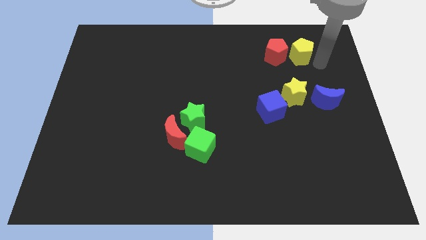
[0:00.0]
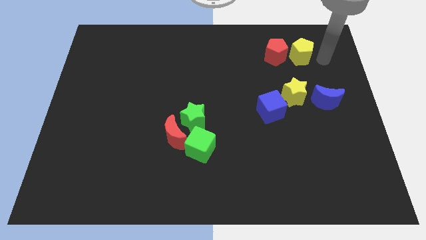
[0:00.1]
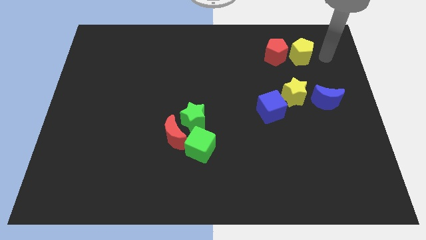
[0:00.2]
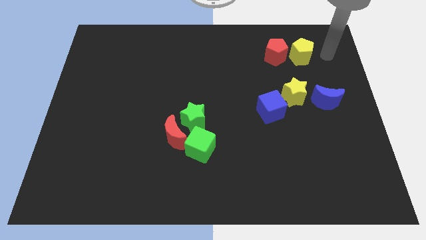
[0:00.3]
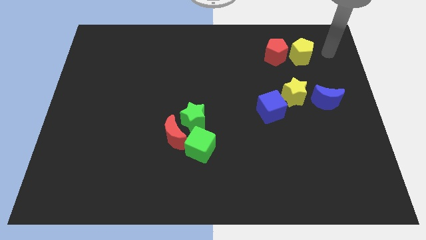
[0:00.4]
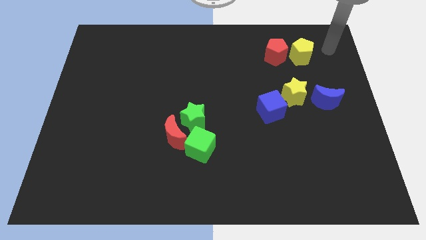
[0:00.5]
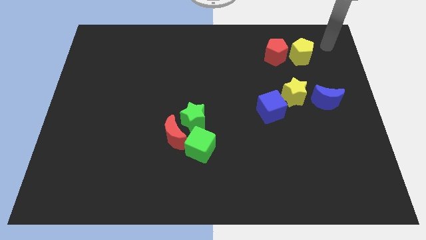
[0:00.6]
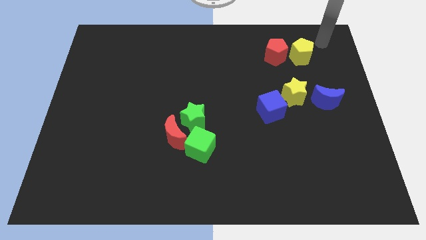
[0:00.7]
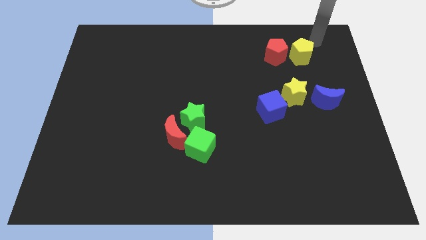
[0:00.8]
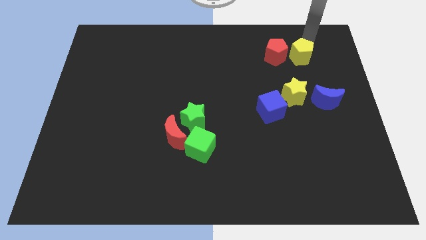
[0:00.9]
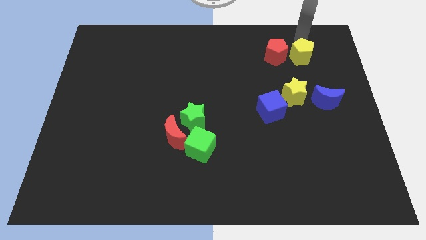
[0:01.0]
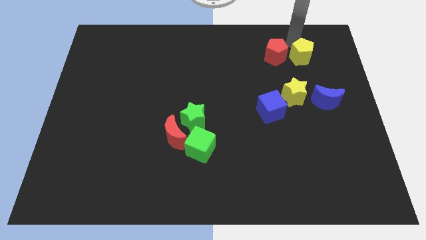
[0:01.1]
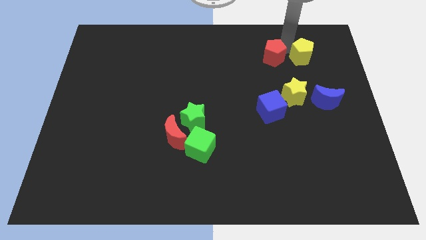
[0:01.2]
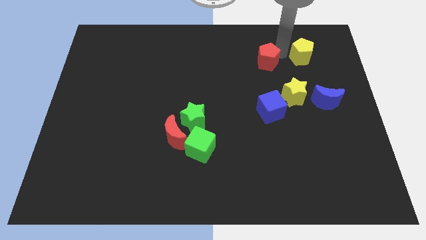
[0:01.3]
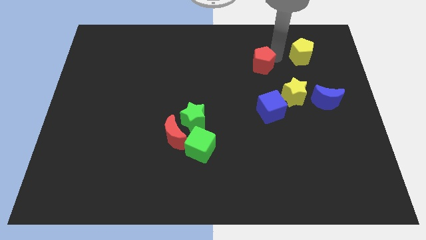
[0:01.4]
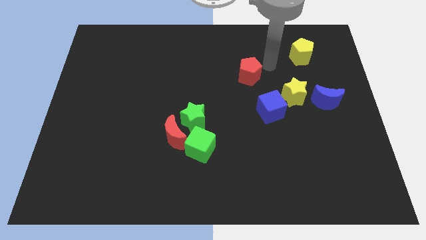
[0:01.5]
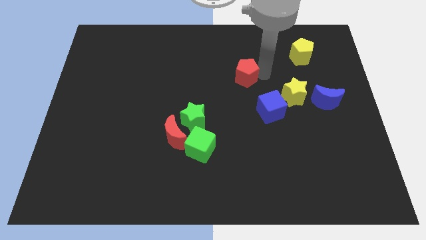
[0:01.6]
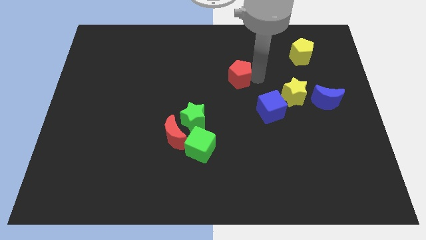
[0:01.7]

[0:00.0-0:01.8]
push the red pentagon towards the center of the board

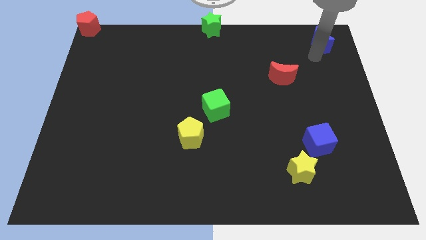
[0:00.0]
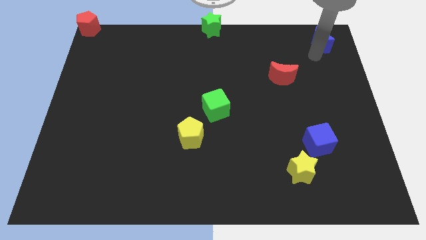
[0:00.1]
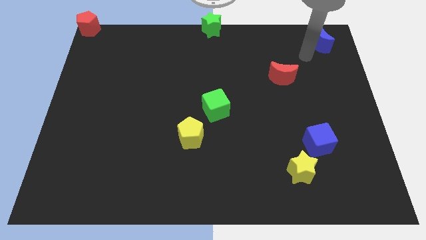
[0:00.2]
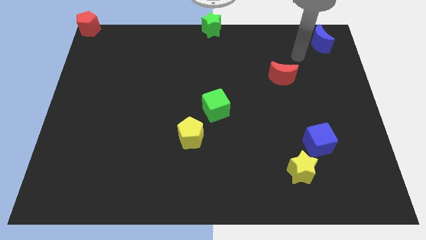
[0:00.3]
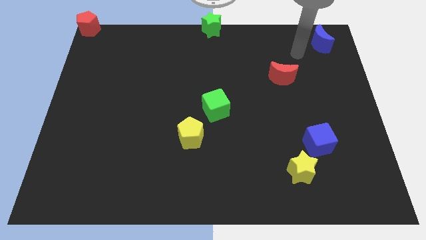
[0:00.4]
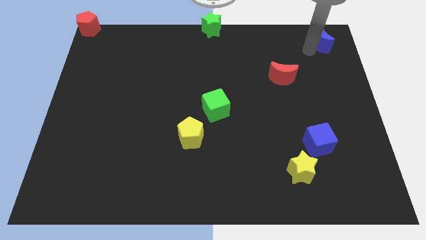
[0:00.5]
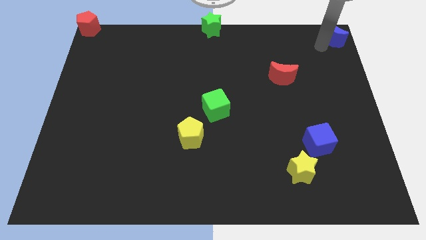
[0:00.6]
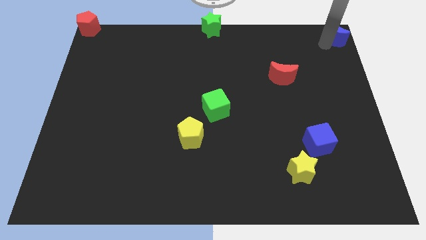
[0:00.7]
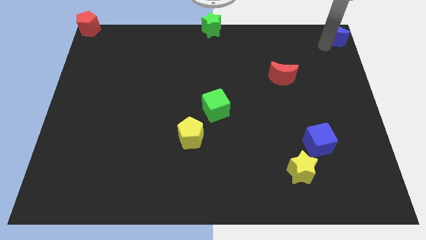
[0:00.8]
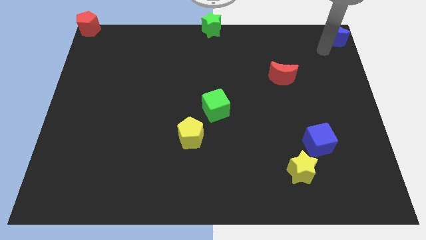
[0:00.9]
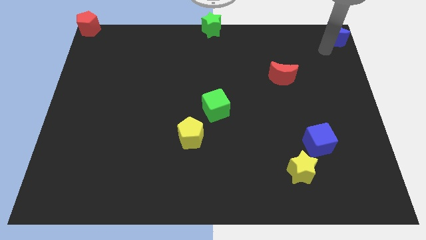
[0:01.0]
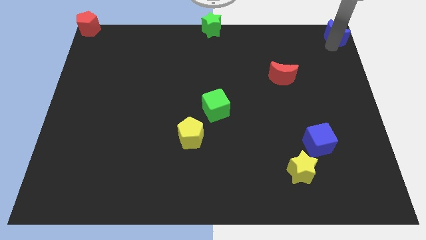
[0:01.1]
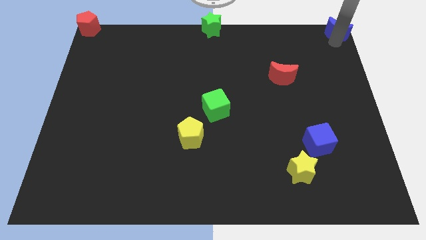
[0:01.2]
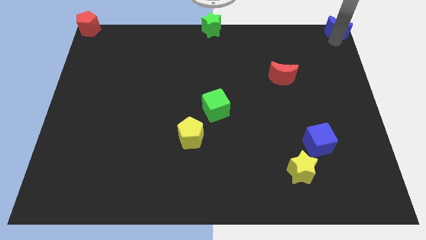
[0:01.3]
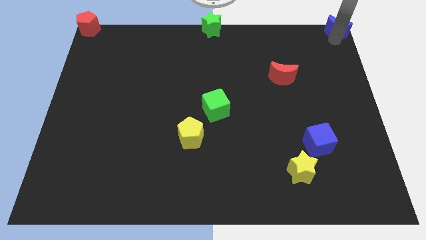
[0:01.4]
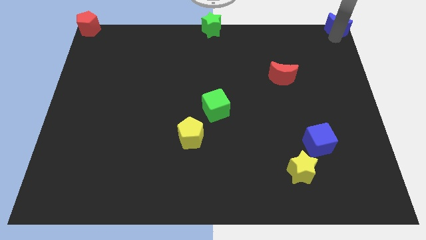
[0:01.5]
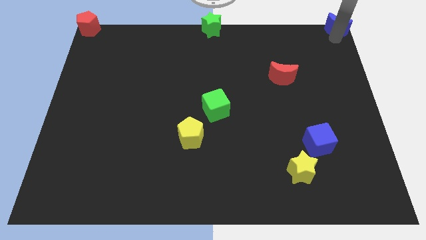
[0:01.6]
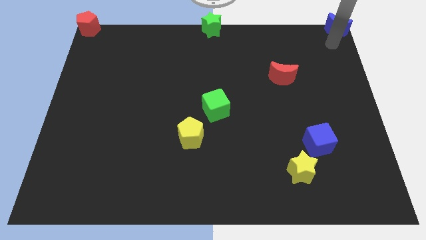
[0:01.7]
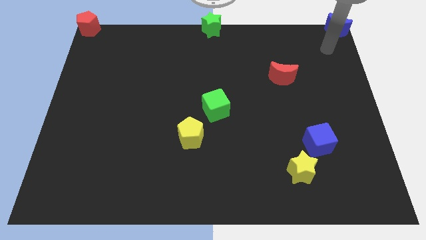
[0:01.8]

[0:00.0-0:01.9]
place the blue crescent at the top right corner

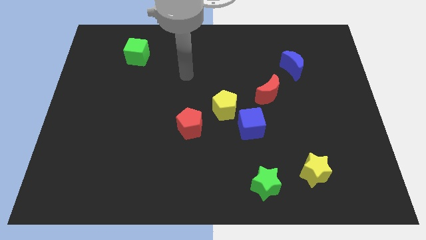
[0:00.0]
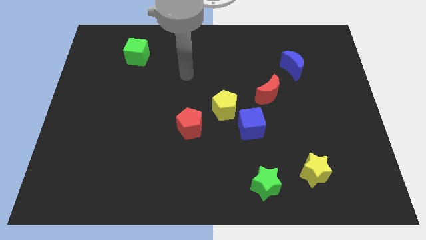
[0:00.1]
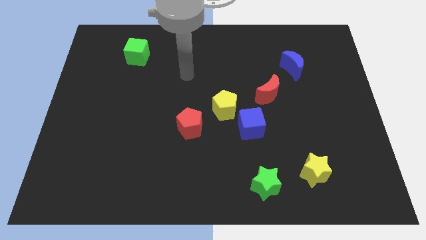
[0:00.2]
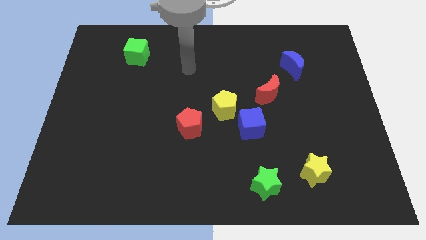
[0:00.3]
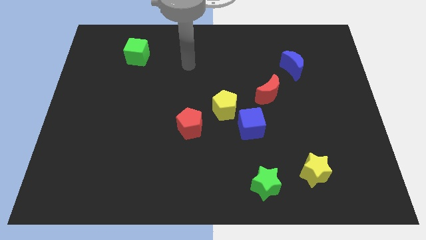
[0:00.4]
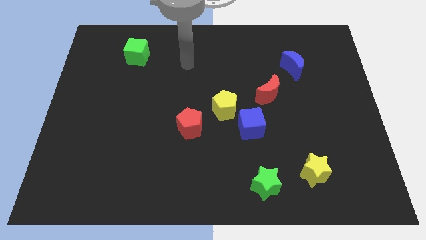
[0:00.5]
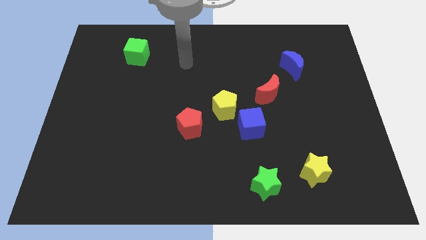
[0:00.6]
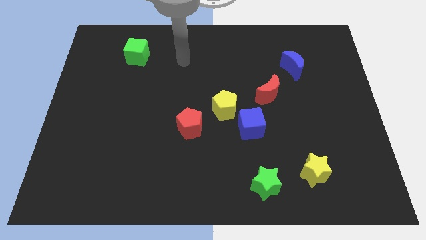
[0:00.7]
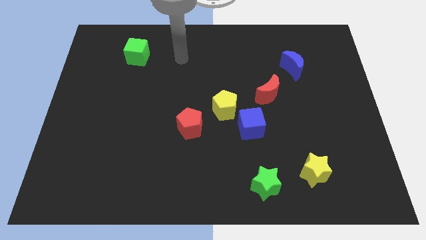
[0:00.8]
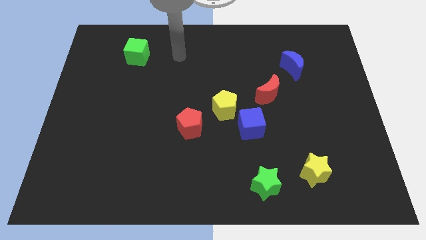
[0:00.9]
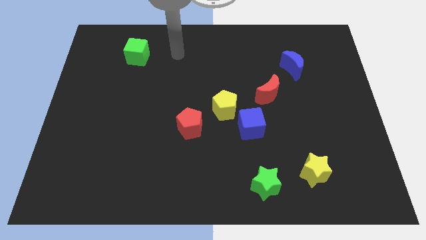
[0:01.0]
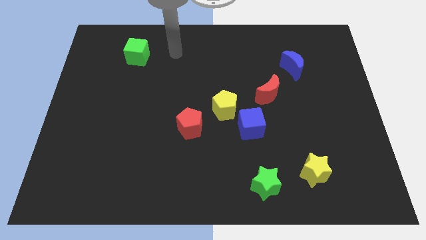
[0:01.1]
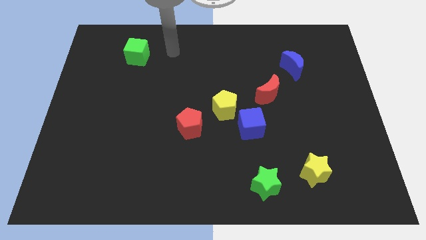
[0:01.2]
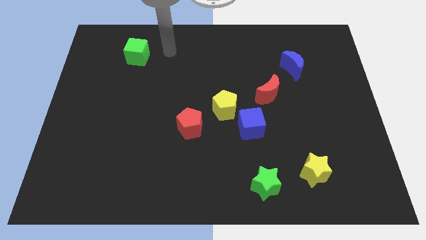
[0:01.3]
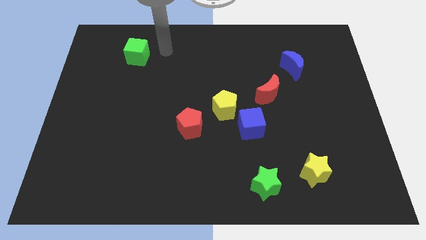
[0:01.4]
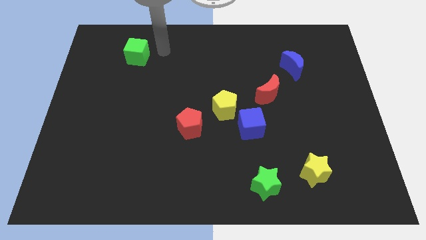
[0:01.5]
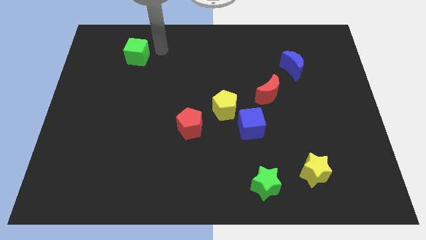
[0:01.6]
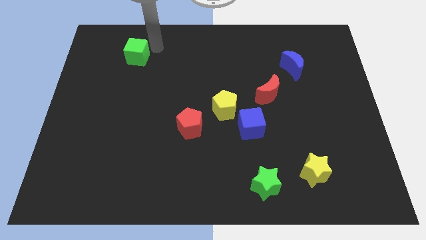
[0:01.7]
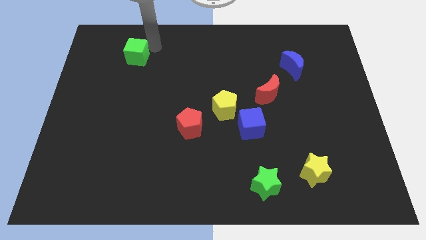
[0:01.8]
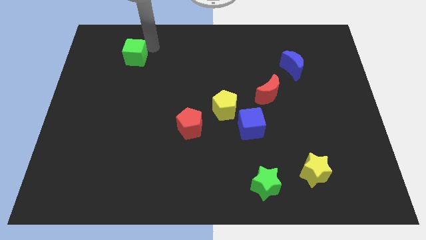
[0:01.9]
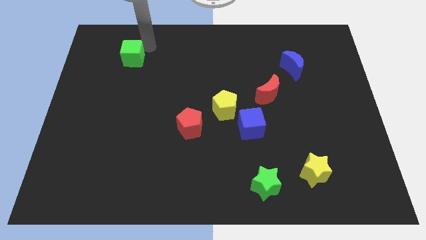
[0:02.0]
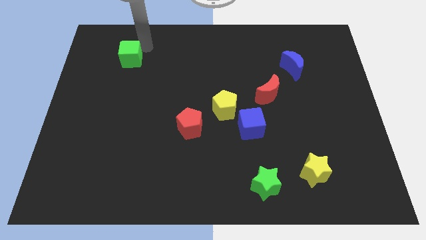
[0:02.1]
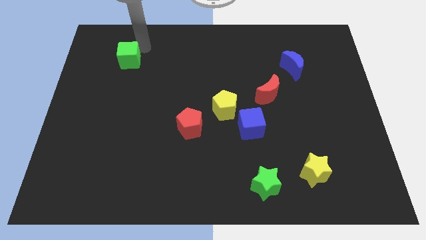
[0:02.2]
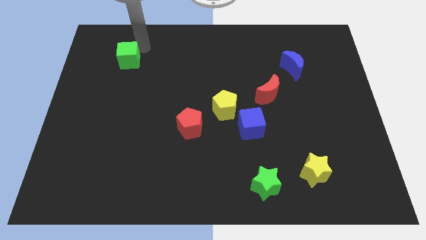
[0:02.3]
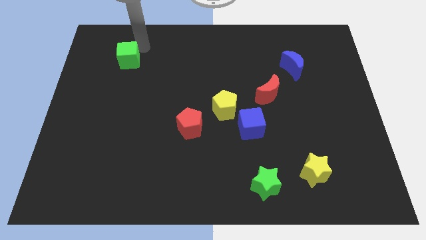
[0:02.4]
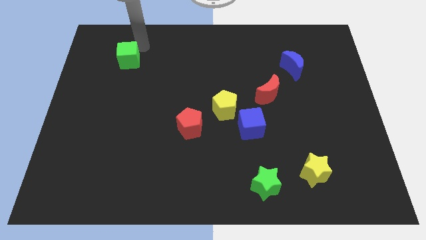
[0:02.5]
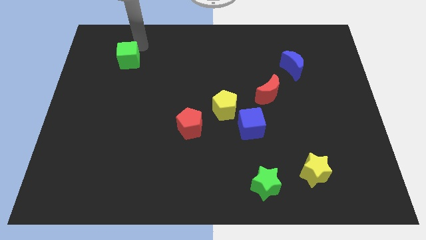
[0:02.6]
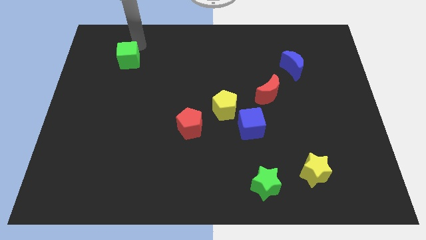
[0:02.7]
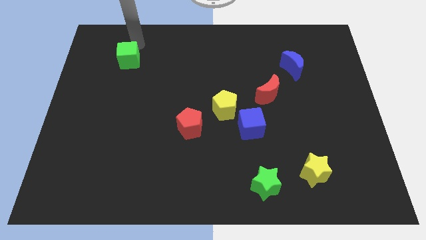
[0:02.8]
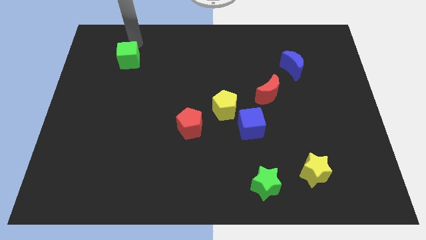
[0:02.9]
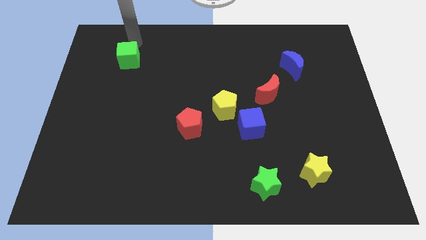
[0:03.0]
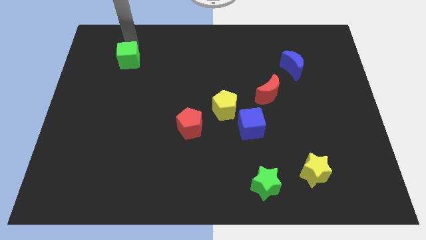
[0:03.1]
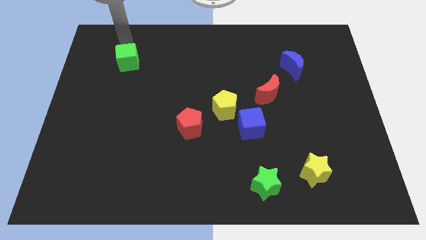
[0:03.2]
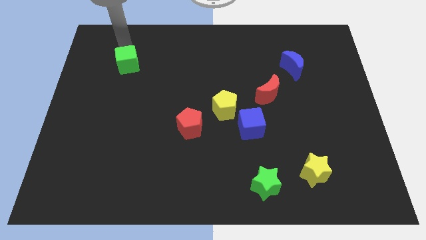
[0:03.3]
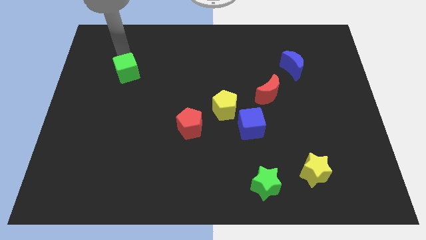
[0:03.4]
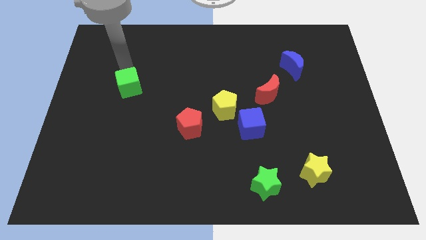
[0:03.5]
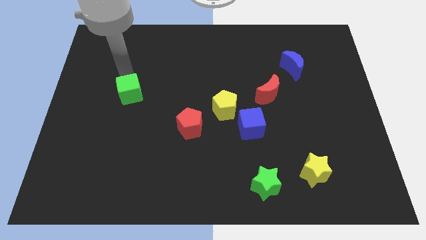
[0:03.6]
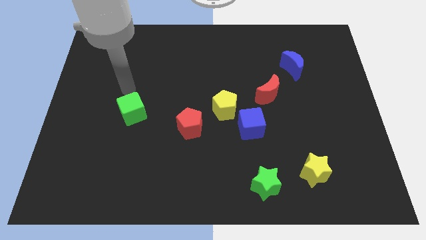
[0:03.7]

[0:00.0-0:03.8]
slightly move the green cube downwards

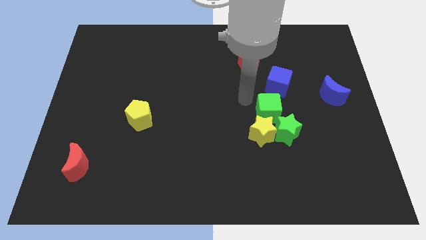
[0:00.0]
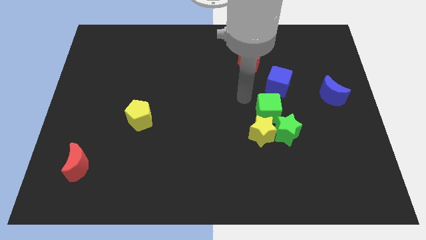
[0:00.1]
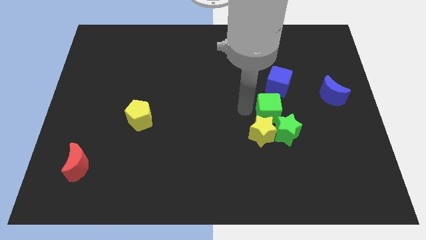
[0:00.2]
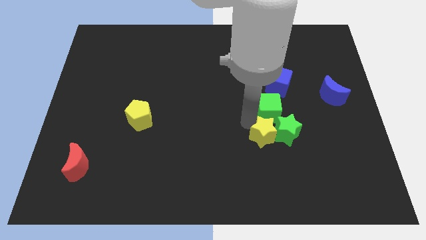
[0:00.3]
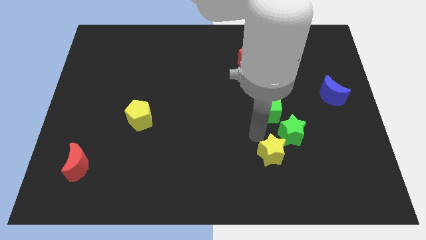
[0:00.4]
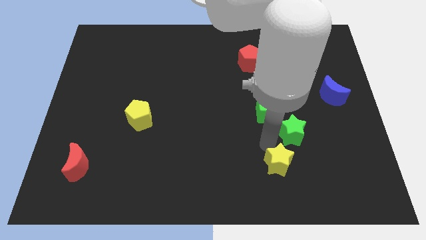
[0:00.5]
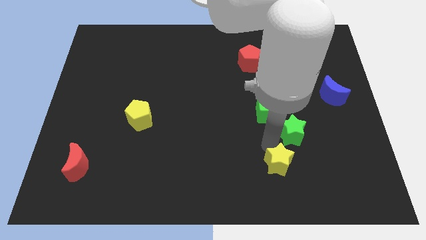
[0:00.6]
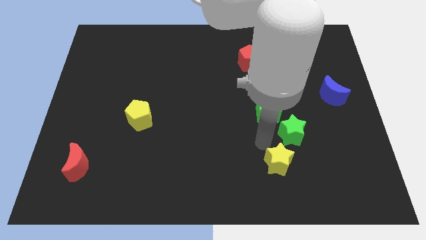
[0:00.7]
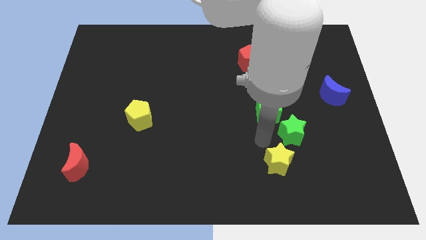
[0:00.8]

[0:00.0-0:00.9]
separate yellow star from the group of objects

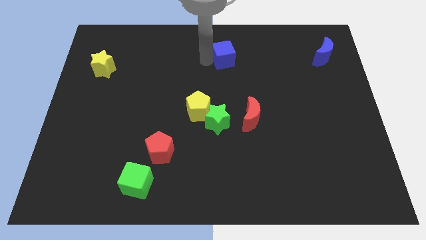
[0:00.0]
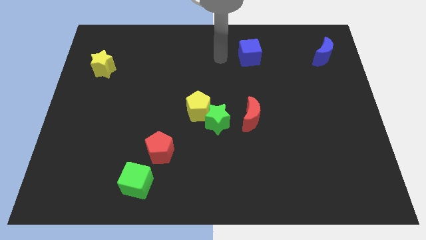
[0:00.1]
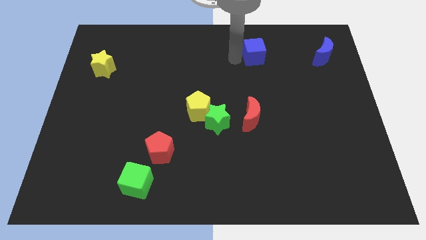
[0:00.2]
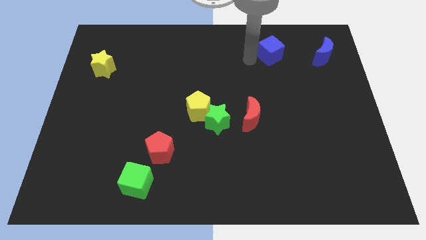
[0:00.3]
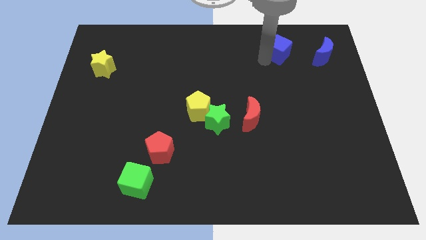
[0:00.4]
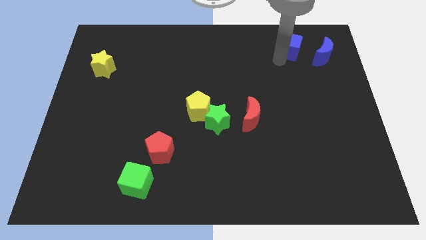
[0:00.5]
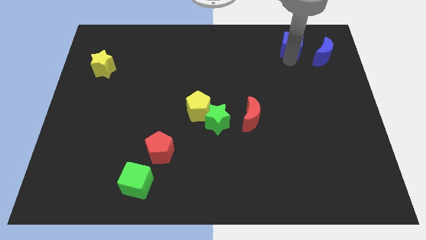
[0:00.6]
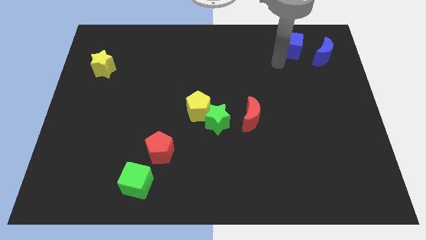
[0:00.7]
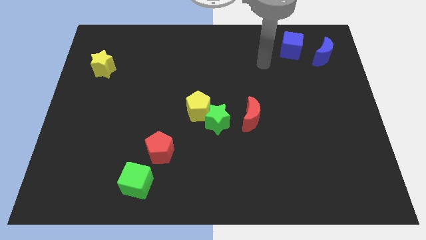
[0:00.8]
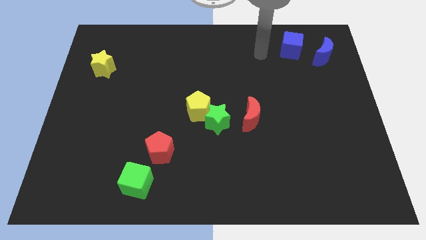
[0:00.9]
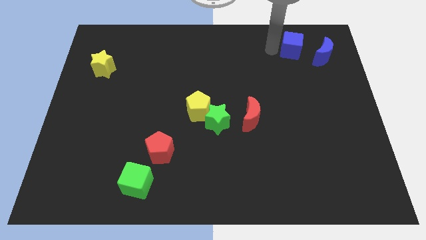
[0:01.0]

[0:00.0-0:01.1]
move the blue cube towards the blue crescent
